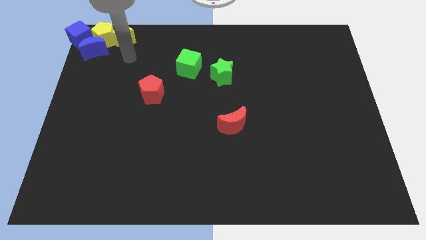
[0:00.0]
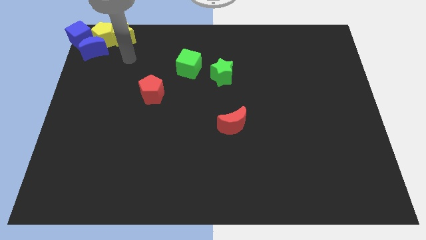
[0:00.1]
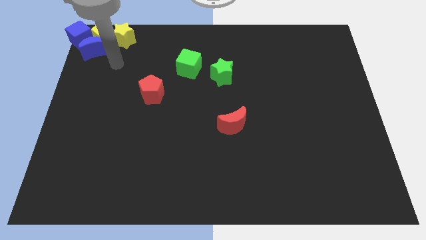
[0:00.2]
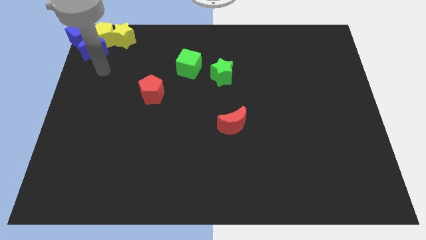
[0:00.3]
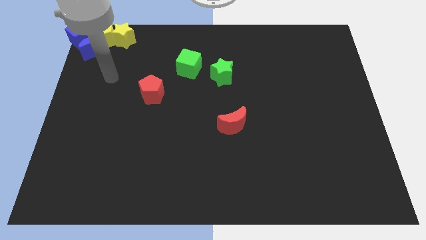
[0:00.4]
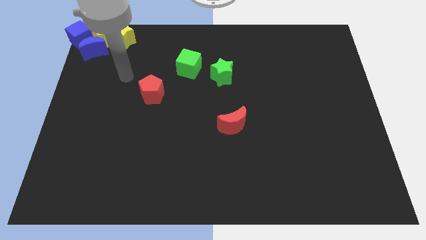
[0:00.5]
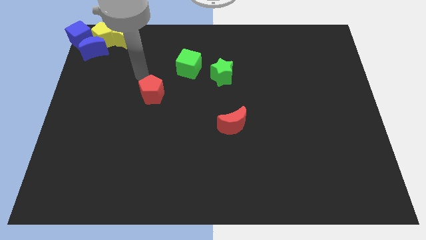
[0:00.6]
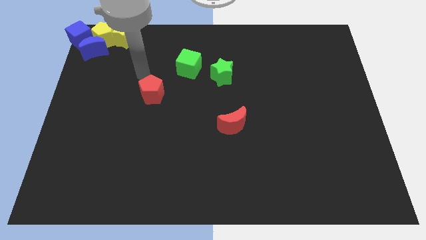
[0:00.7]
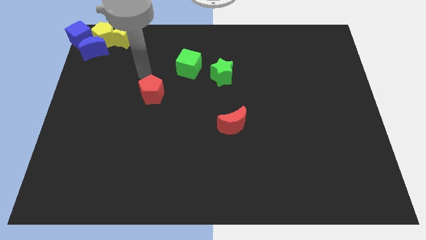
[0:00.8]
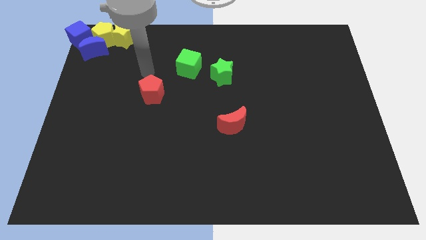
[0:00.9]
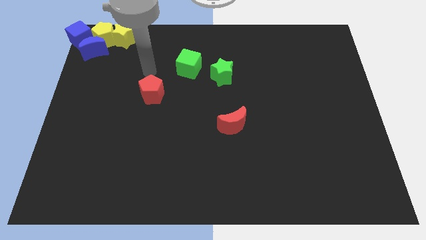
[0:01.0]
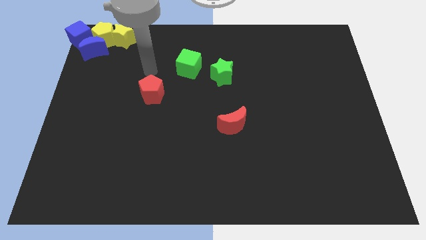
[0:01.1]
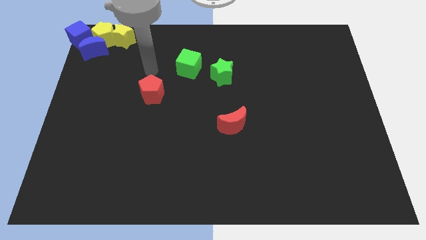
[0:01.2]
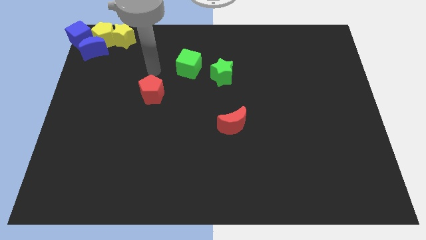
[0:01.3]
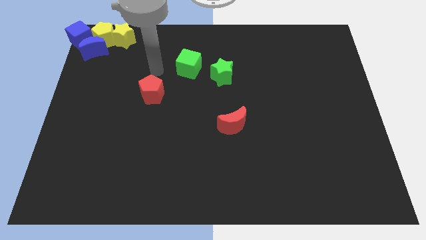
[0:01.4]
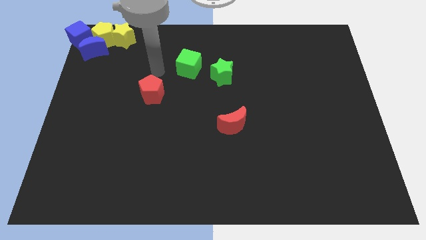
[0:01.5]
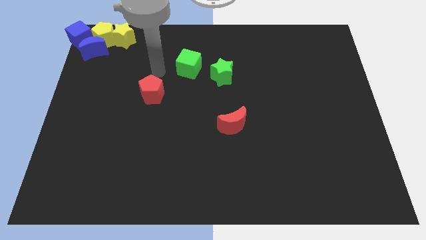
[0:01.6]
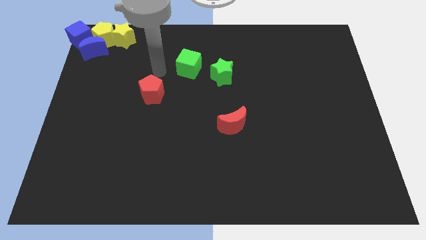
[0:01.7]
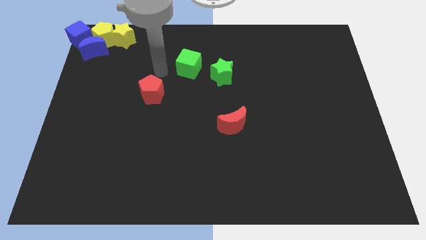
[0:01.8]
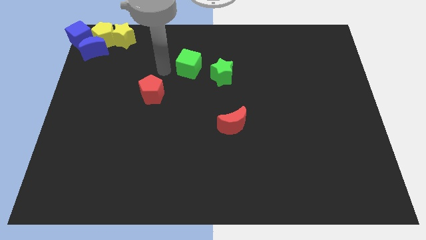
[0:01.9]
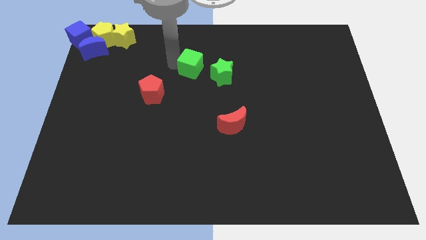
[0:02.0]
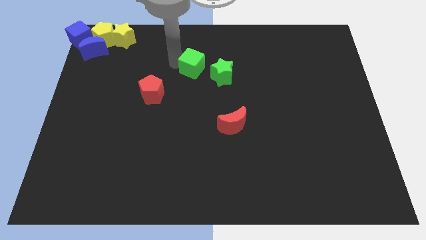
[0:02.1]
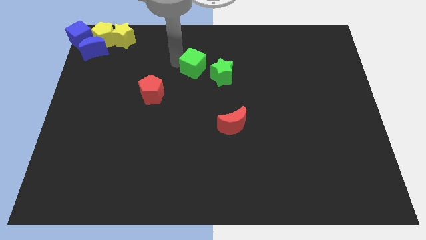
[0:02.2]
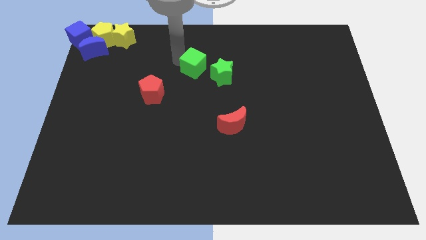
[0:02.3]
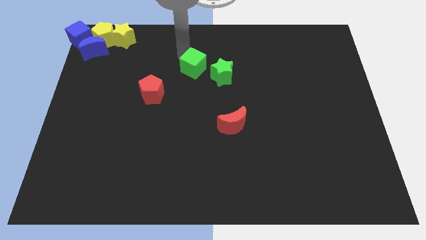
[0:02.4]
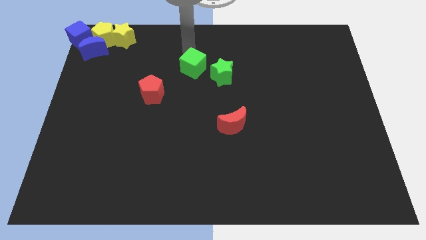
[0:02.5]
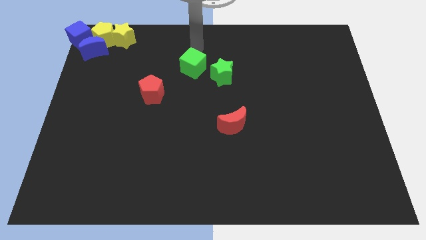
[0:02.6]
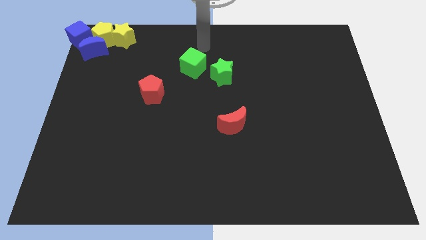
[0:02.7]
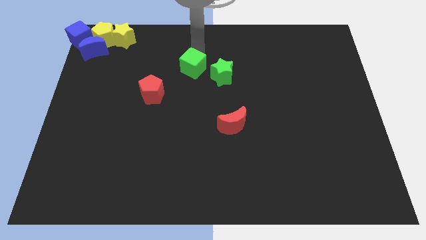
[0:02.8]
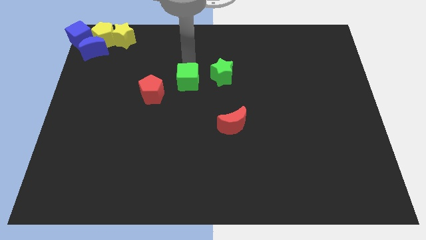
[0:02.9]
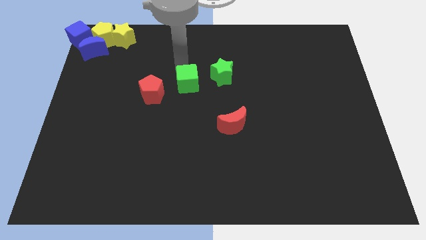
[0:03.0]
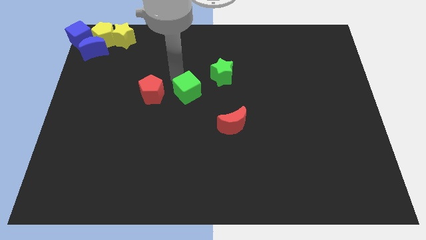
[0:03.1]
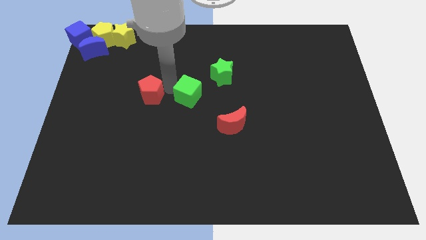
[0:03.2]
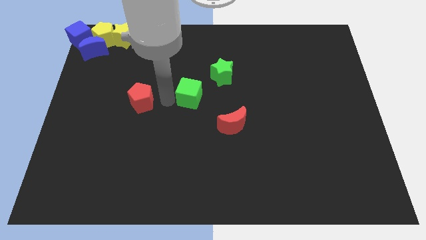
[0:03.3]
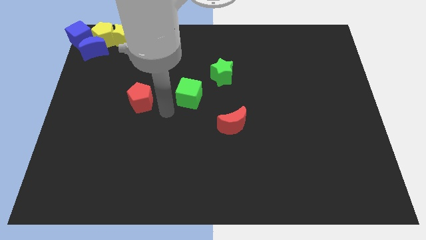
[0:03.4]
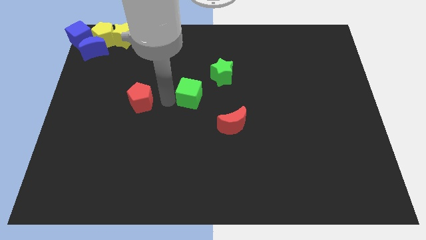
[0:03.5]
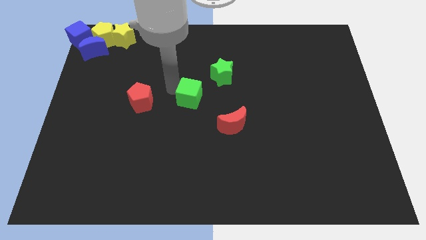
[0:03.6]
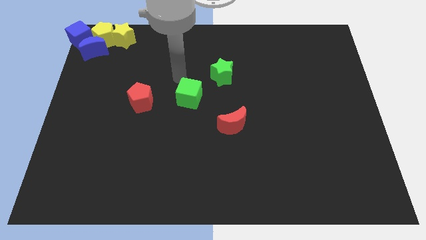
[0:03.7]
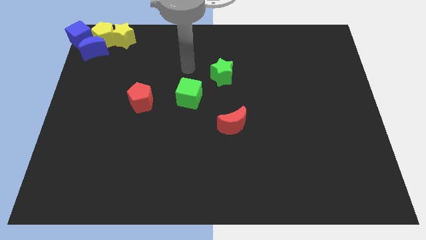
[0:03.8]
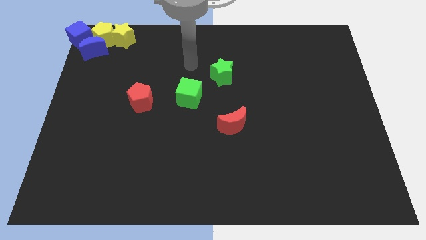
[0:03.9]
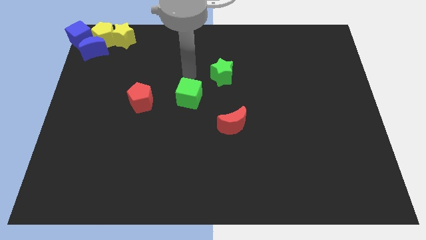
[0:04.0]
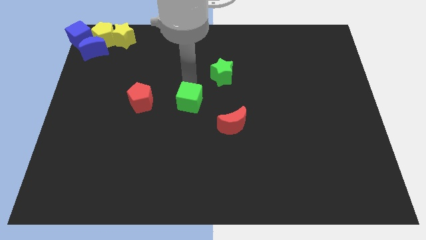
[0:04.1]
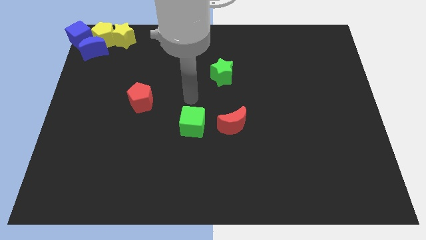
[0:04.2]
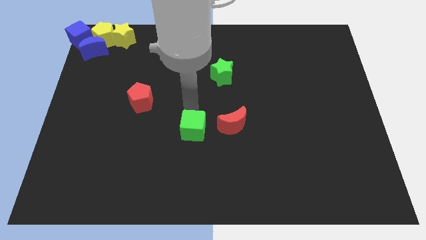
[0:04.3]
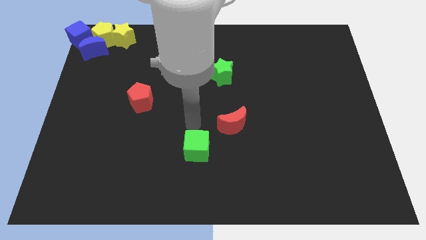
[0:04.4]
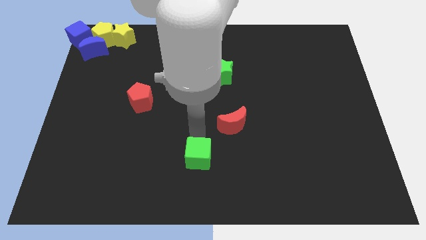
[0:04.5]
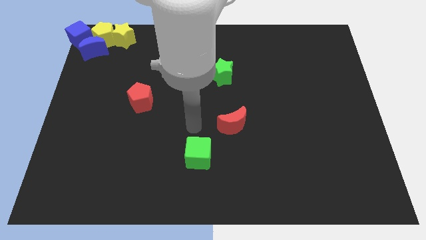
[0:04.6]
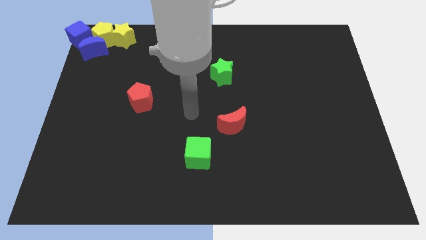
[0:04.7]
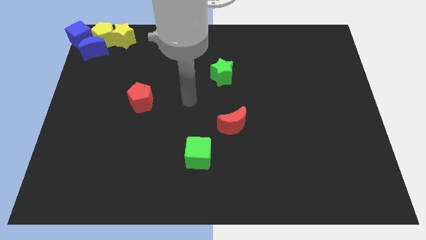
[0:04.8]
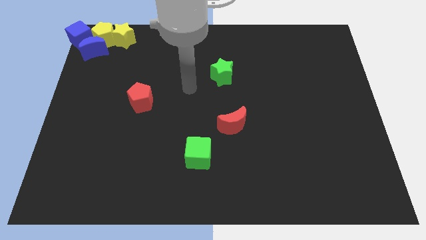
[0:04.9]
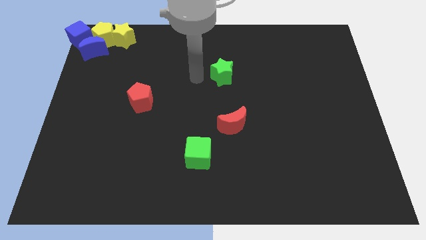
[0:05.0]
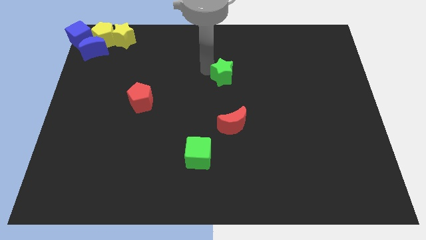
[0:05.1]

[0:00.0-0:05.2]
push the green cube downwards

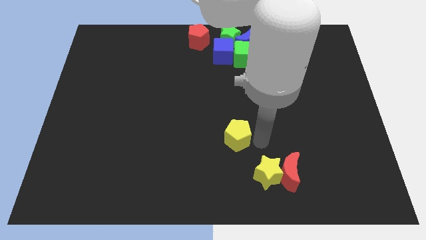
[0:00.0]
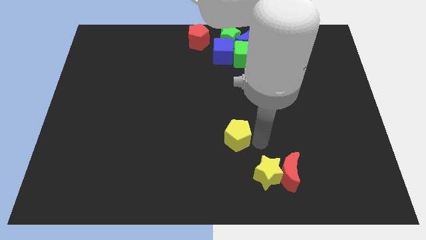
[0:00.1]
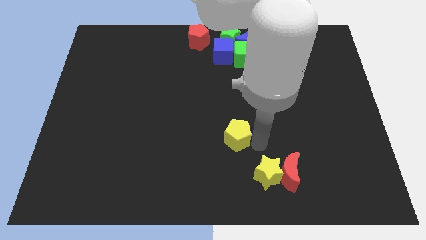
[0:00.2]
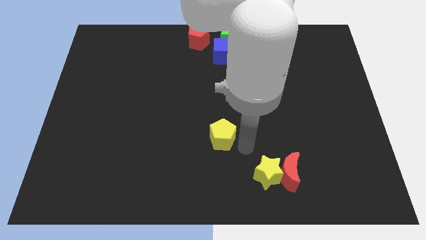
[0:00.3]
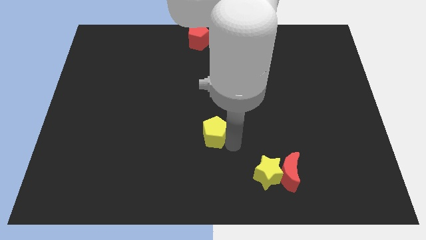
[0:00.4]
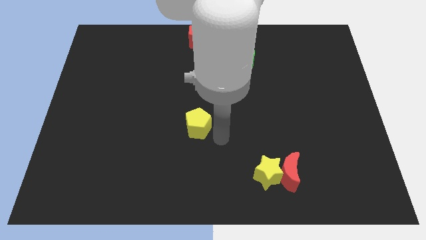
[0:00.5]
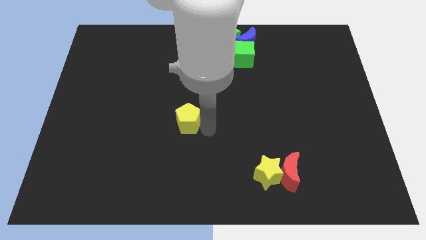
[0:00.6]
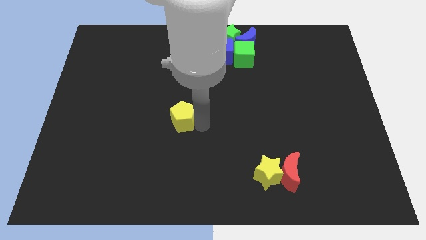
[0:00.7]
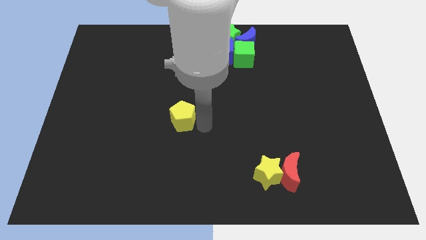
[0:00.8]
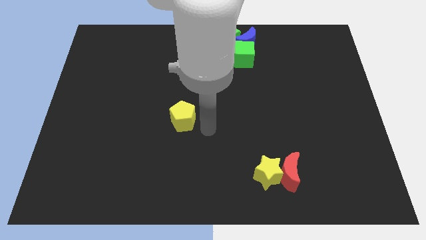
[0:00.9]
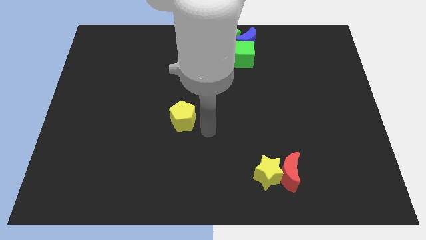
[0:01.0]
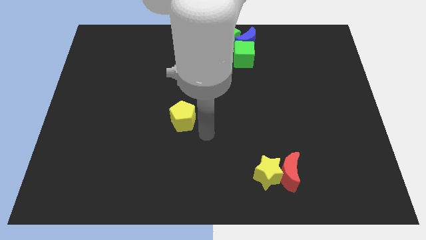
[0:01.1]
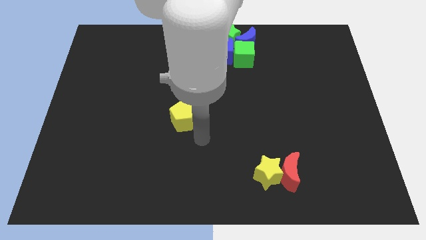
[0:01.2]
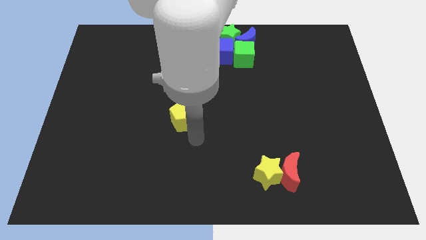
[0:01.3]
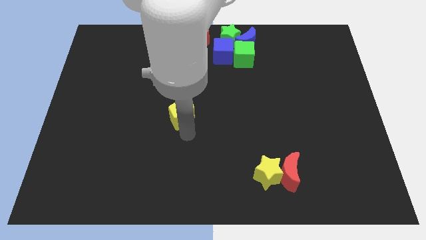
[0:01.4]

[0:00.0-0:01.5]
push the yellow pentagon towards the left side of the board

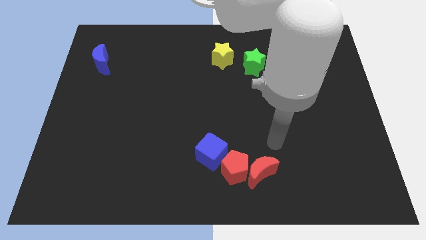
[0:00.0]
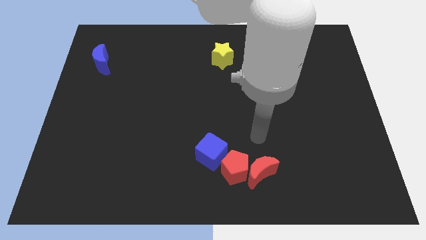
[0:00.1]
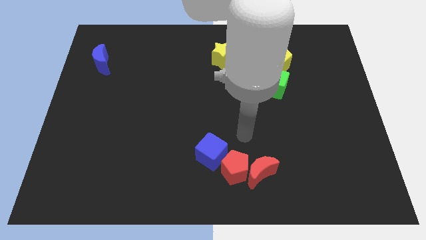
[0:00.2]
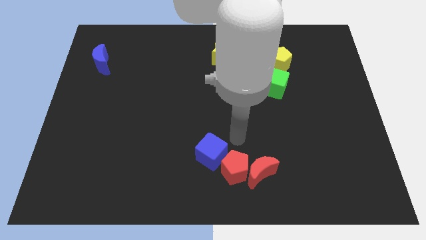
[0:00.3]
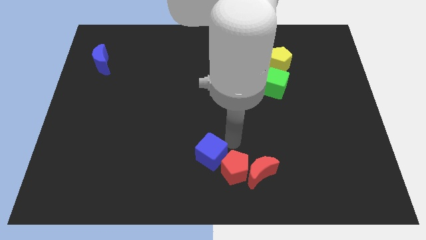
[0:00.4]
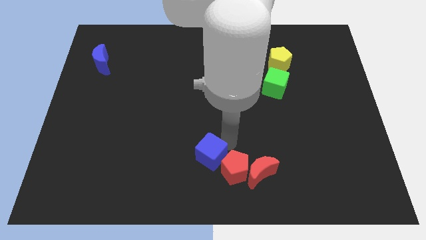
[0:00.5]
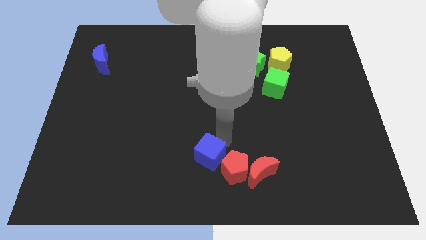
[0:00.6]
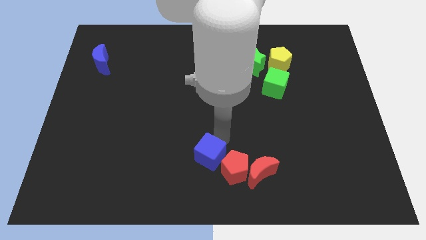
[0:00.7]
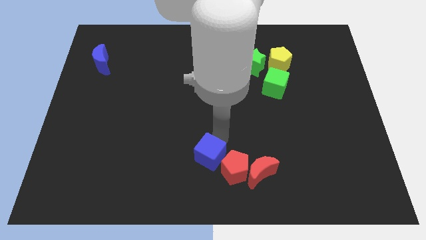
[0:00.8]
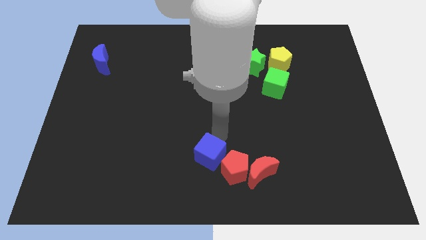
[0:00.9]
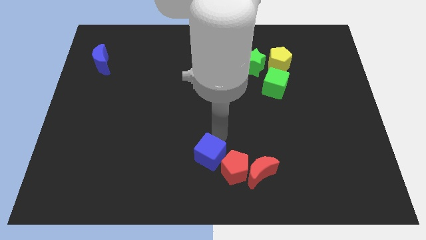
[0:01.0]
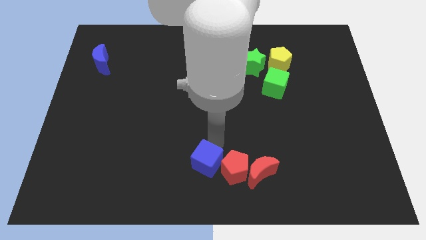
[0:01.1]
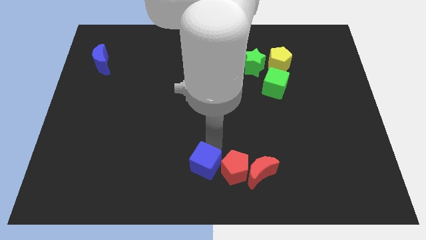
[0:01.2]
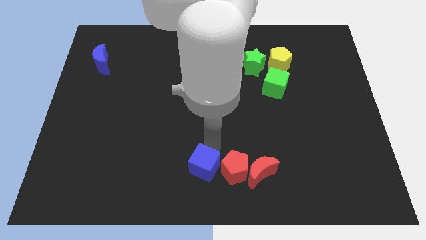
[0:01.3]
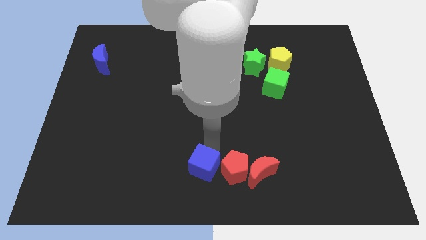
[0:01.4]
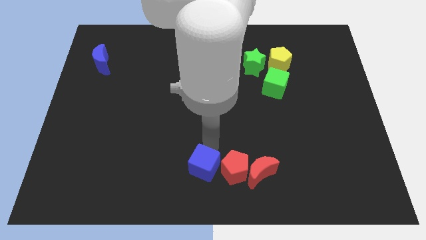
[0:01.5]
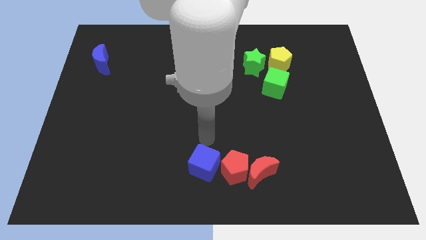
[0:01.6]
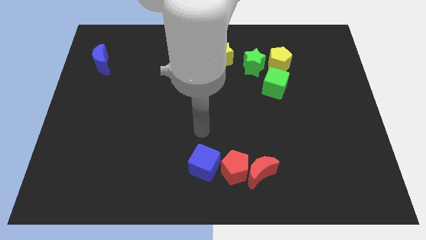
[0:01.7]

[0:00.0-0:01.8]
slightly push the blue cube towards the bottom center of the board

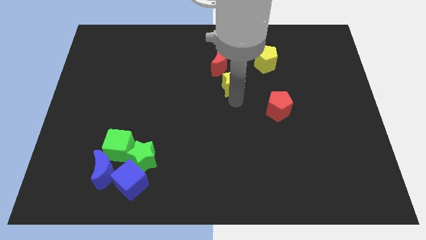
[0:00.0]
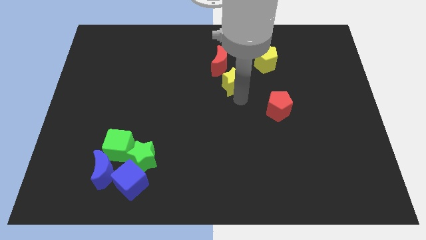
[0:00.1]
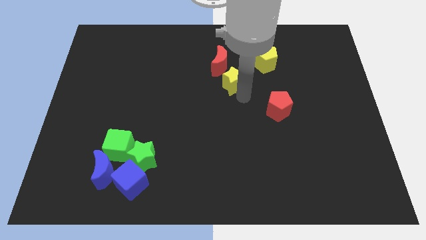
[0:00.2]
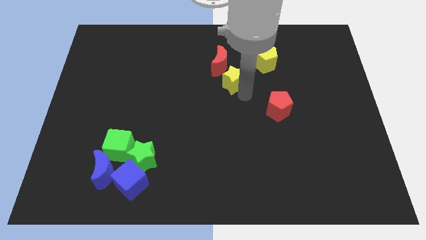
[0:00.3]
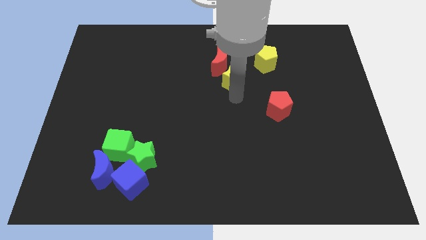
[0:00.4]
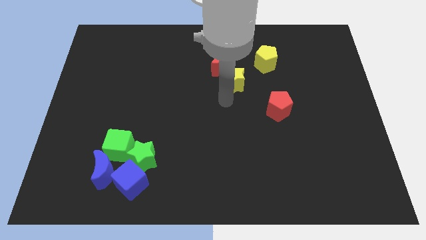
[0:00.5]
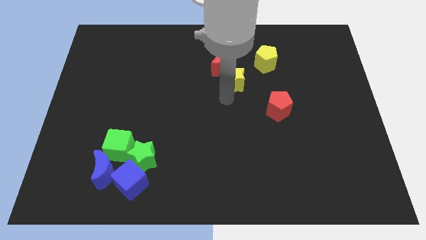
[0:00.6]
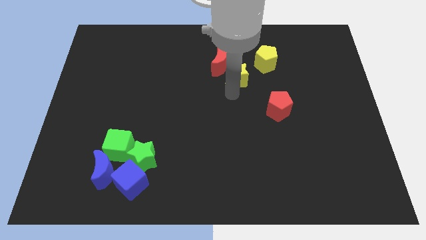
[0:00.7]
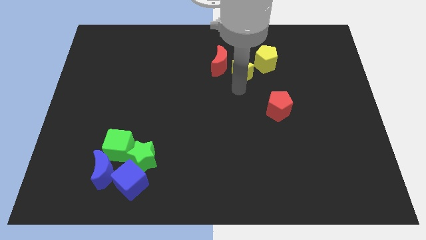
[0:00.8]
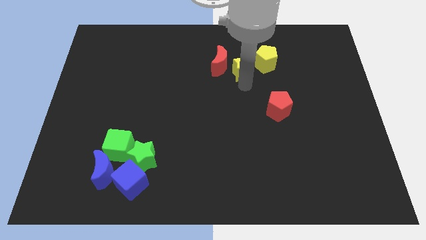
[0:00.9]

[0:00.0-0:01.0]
place the yellow star below the yellow pentagon
